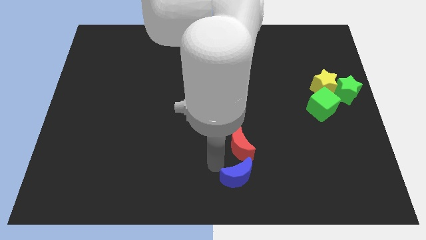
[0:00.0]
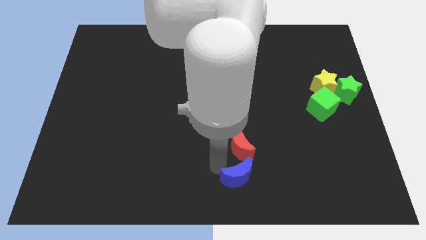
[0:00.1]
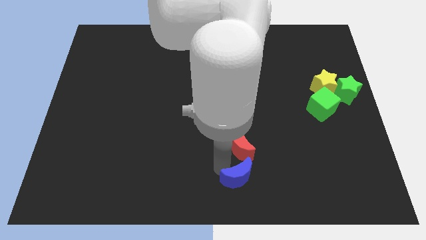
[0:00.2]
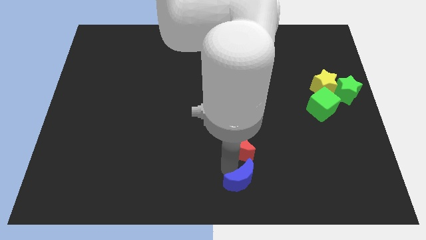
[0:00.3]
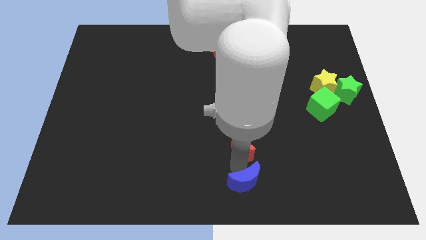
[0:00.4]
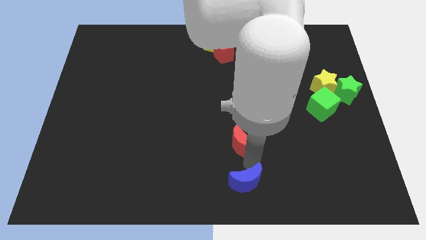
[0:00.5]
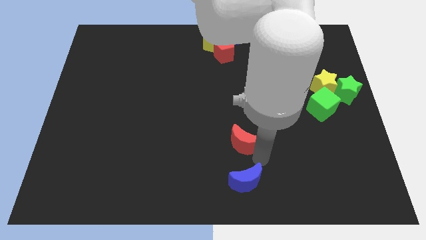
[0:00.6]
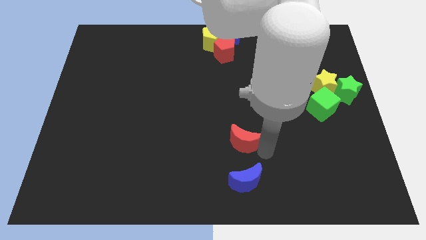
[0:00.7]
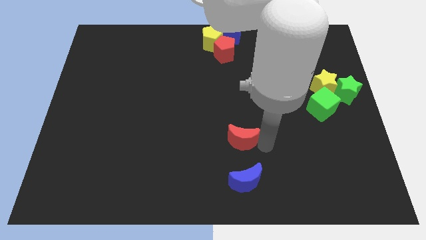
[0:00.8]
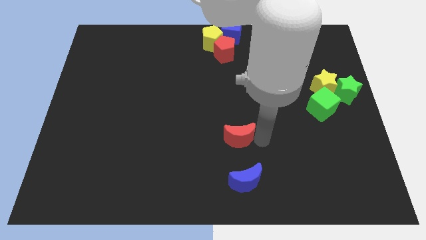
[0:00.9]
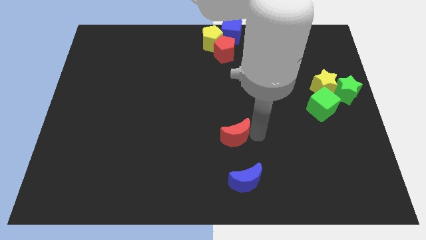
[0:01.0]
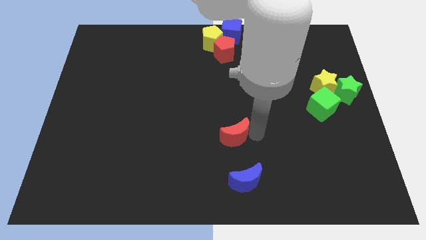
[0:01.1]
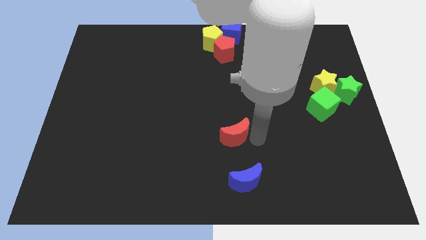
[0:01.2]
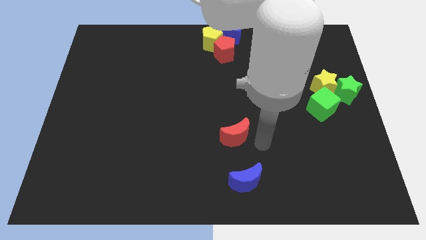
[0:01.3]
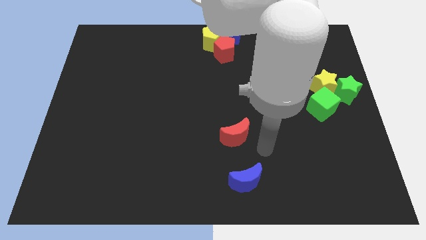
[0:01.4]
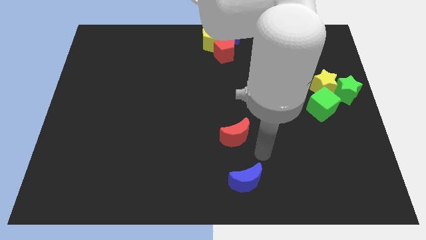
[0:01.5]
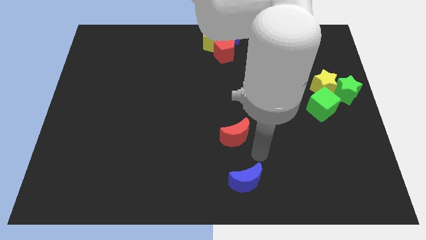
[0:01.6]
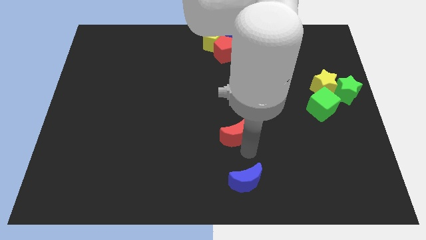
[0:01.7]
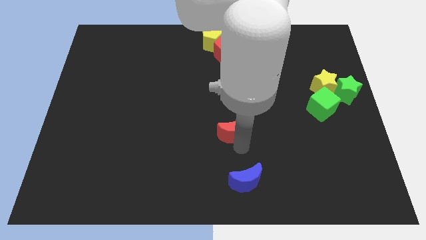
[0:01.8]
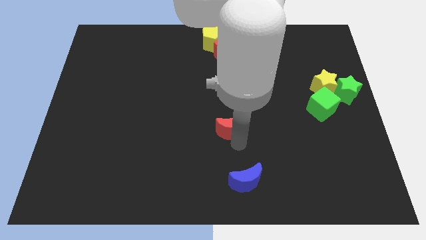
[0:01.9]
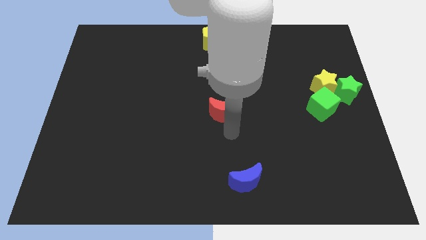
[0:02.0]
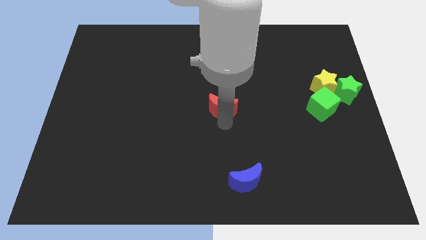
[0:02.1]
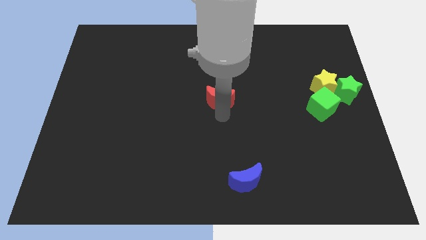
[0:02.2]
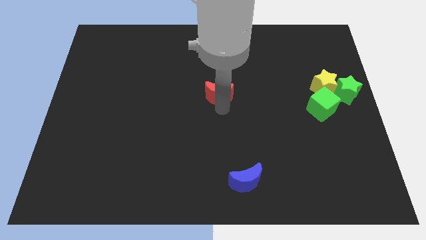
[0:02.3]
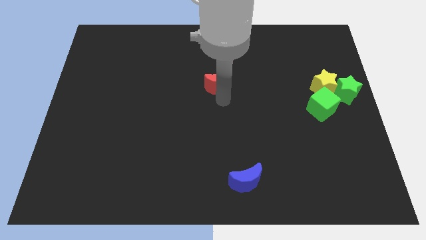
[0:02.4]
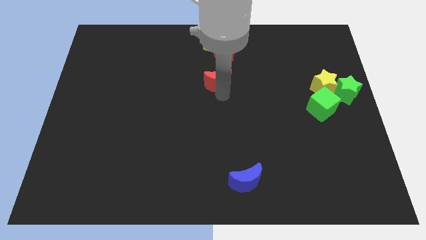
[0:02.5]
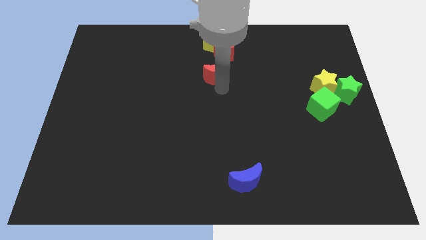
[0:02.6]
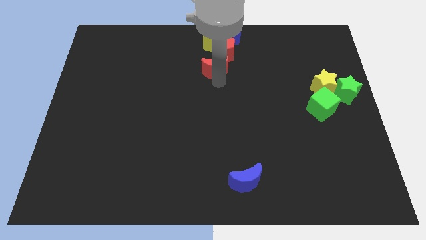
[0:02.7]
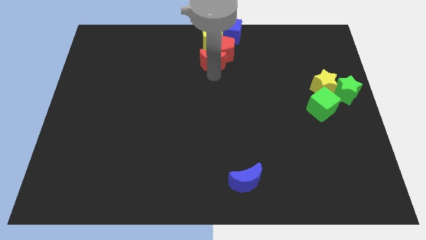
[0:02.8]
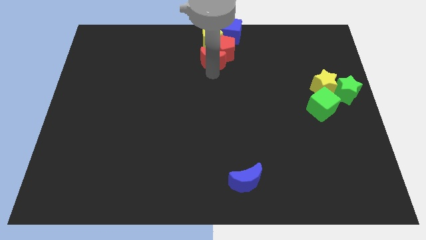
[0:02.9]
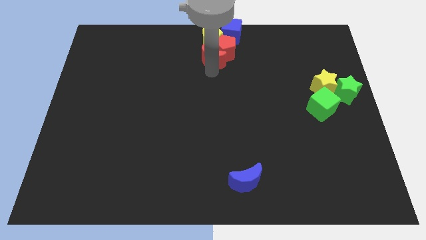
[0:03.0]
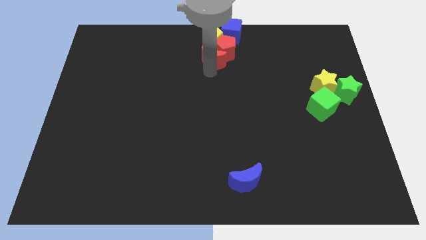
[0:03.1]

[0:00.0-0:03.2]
separate the red moon and blue moon

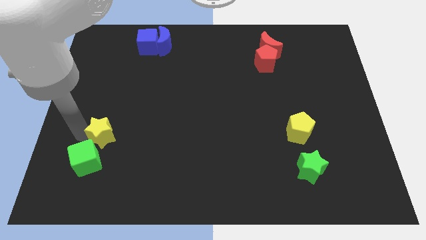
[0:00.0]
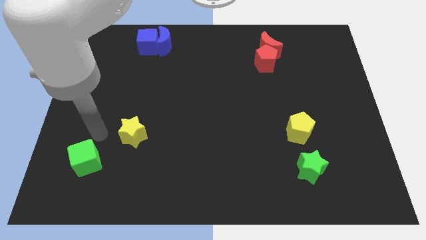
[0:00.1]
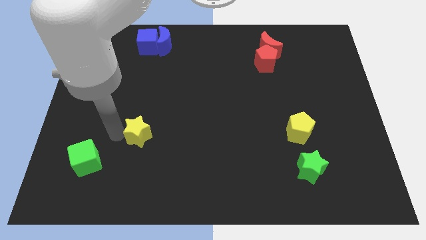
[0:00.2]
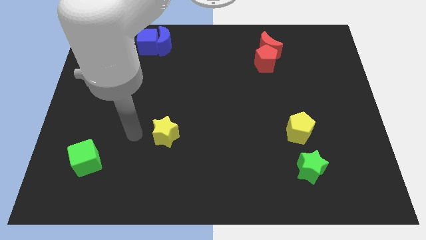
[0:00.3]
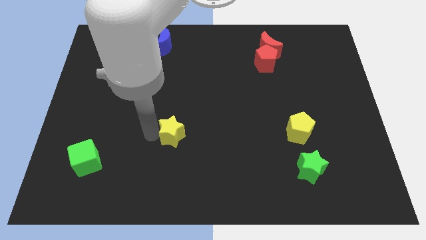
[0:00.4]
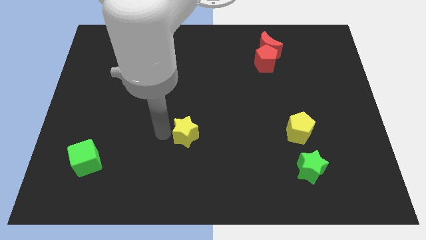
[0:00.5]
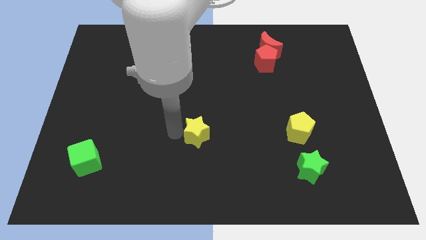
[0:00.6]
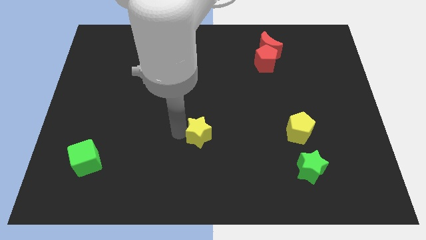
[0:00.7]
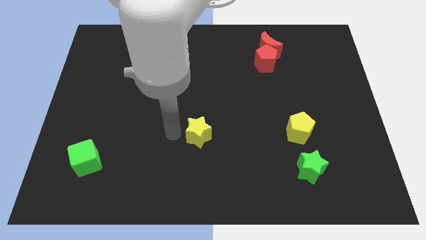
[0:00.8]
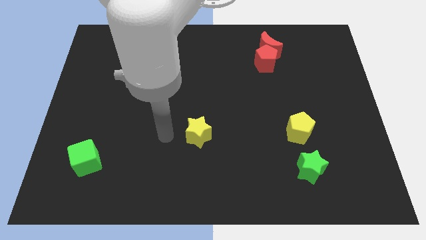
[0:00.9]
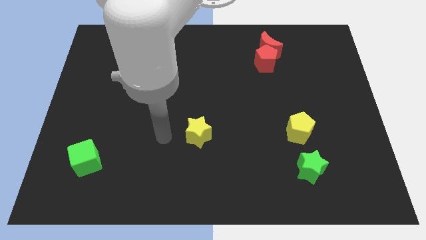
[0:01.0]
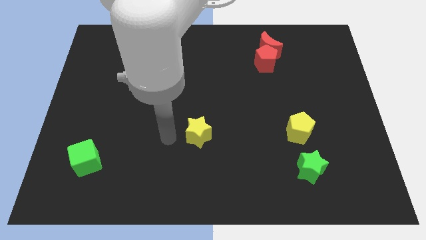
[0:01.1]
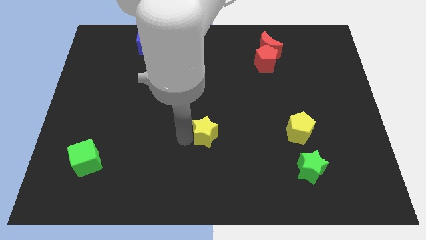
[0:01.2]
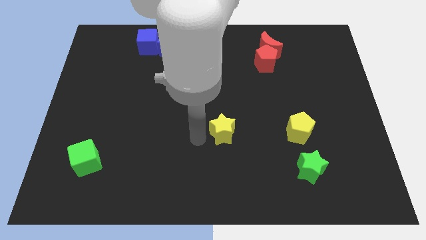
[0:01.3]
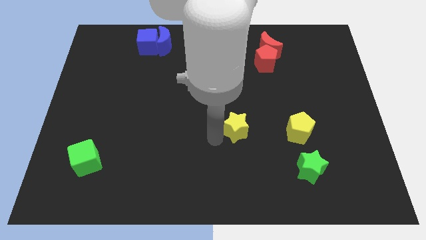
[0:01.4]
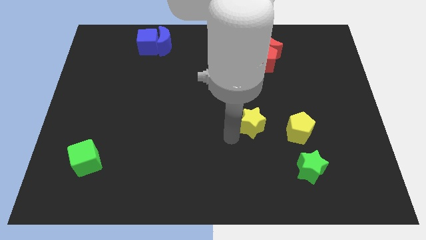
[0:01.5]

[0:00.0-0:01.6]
put the yellow star to the left side of the yellow pentagon

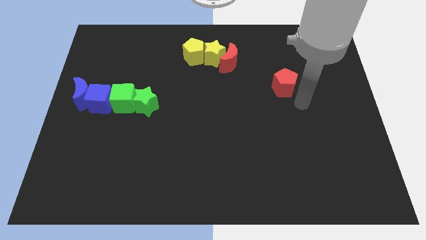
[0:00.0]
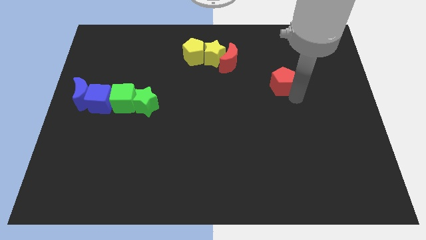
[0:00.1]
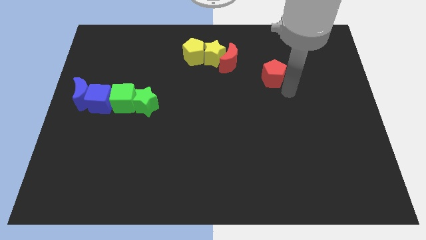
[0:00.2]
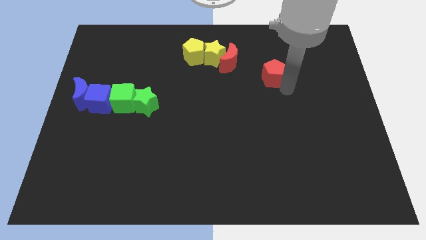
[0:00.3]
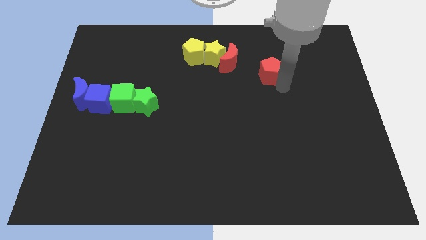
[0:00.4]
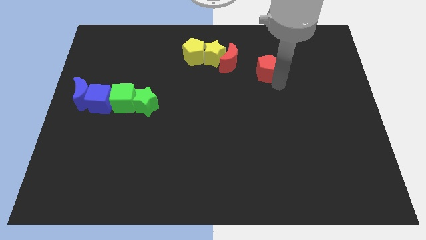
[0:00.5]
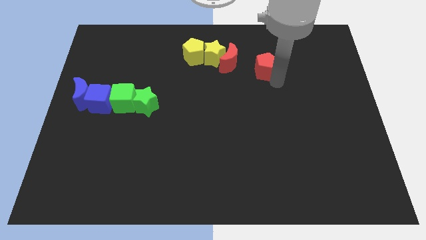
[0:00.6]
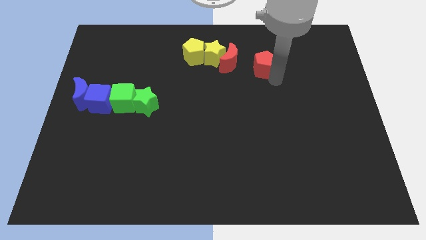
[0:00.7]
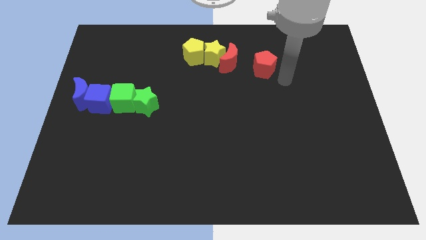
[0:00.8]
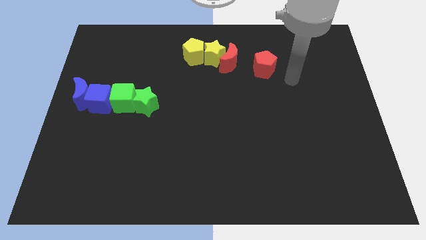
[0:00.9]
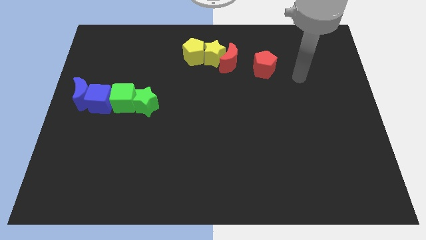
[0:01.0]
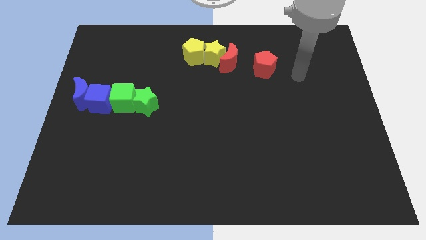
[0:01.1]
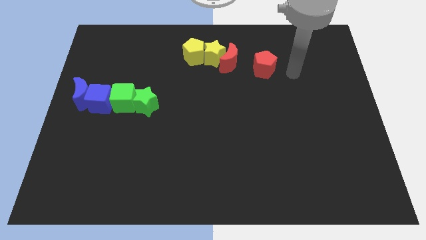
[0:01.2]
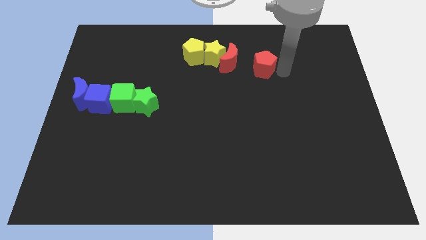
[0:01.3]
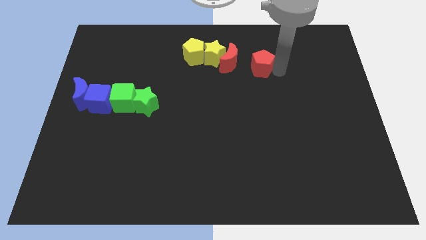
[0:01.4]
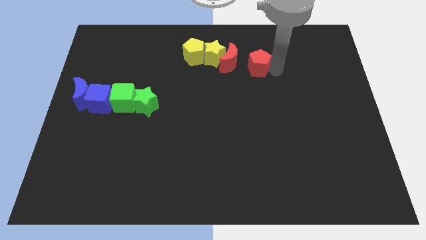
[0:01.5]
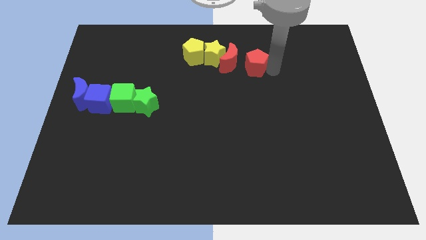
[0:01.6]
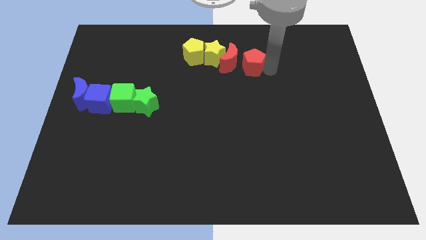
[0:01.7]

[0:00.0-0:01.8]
move the red pentagon to the right of the red crescent

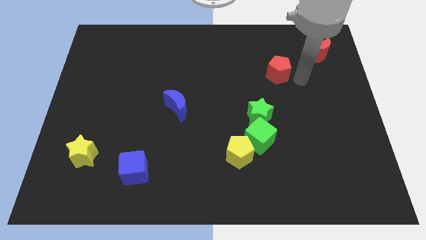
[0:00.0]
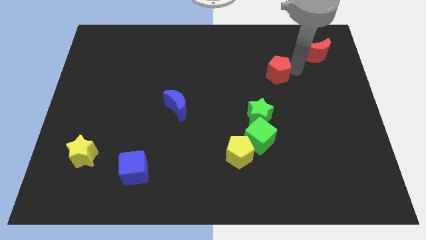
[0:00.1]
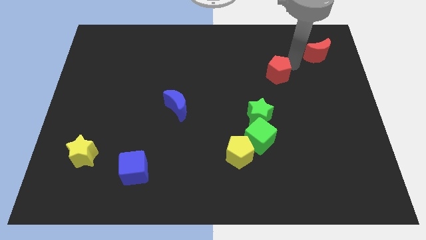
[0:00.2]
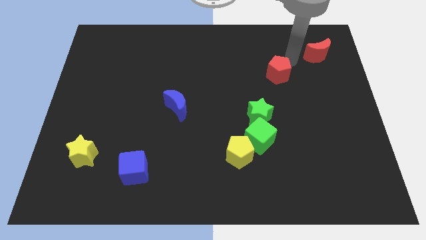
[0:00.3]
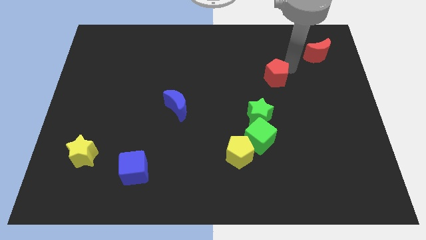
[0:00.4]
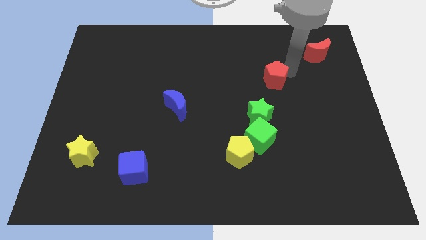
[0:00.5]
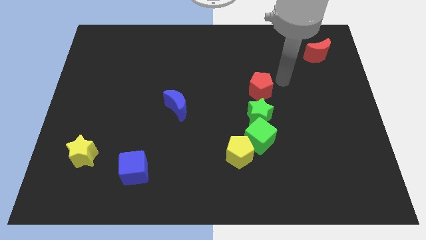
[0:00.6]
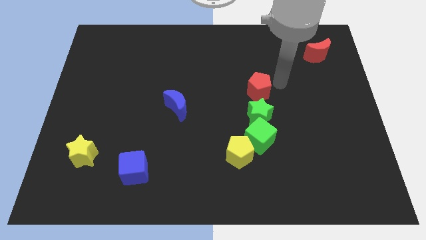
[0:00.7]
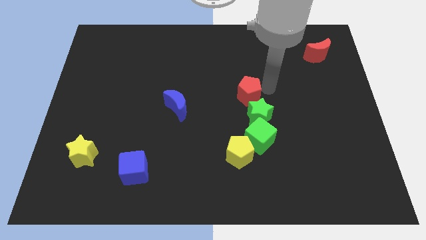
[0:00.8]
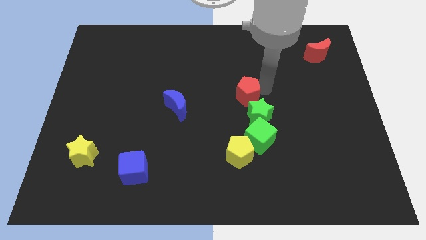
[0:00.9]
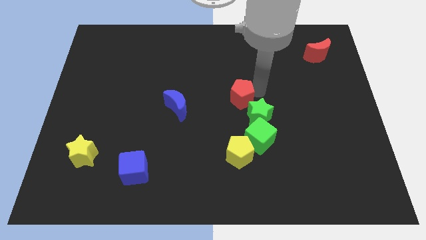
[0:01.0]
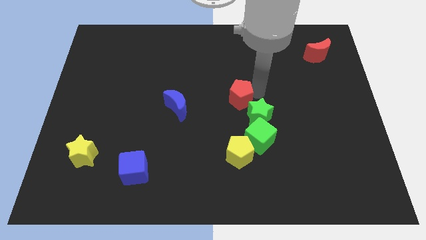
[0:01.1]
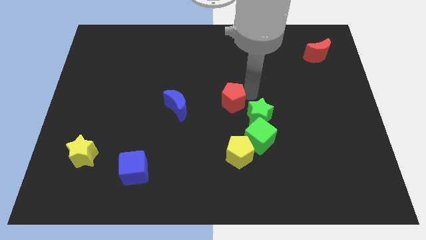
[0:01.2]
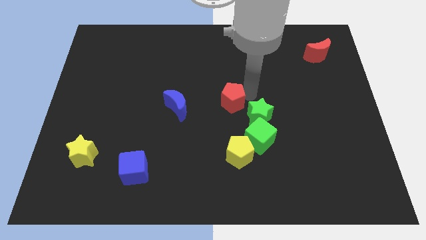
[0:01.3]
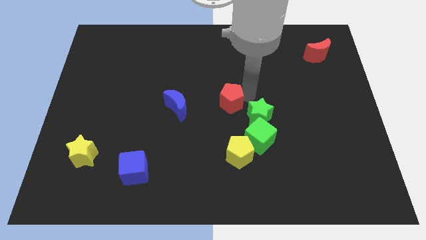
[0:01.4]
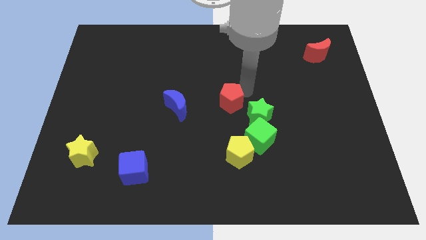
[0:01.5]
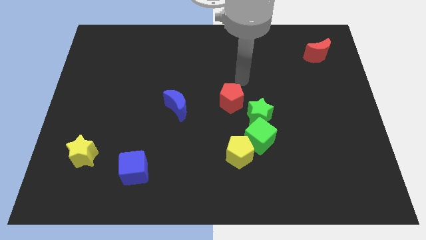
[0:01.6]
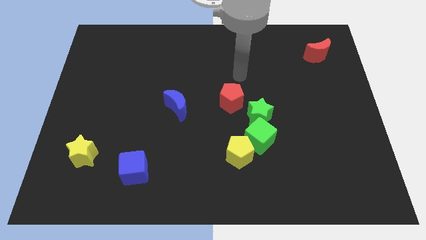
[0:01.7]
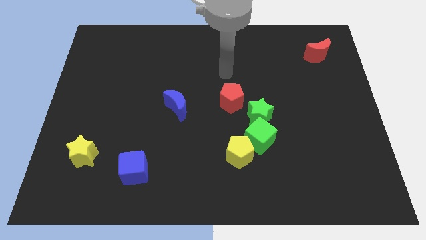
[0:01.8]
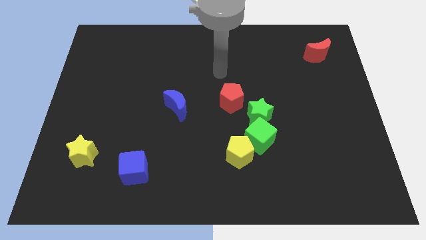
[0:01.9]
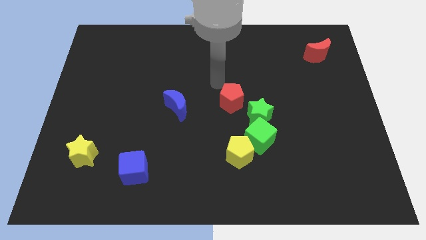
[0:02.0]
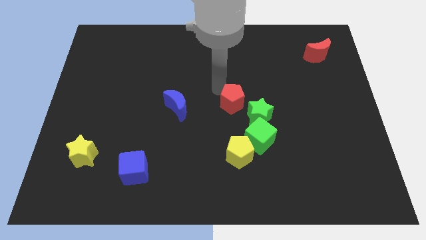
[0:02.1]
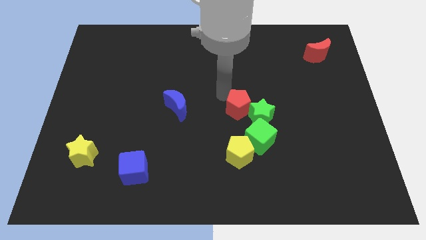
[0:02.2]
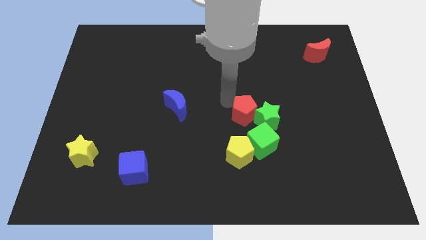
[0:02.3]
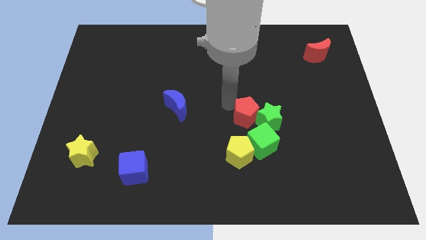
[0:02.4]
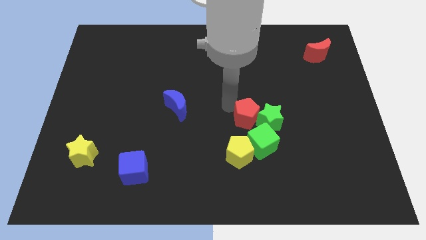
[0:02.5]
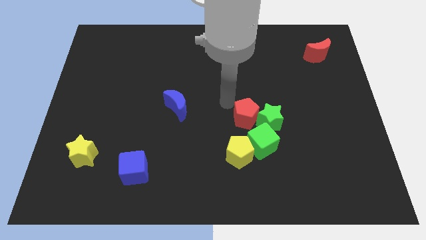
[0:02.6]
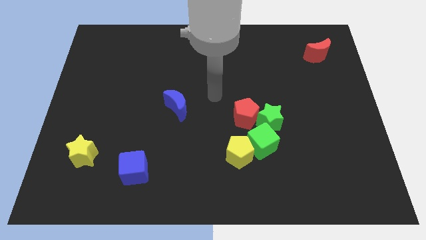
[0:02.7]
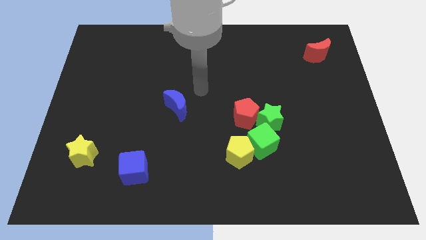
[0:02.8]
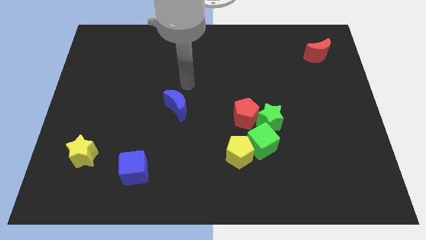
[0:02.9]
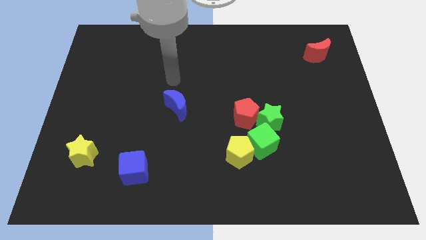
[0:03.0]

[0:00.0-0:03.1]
move the red pentagon diagonally top left to the green star
